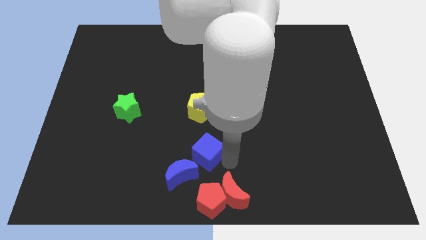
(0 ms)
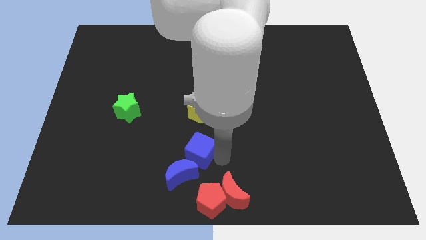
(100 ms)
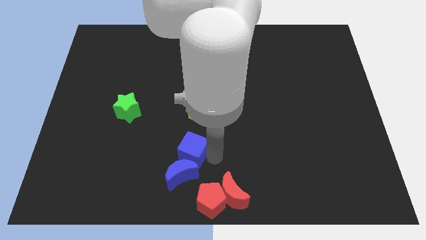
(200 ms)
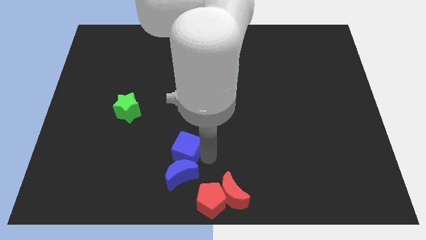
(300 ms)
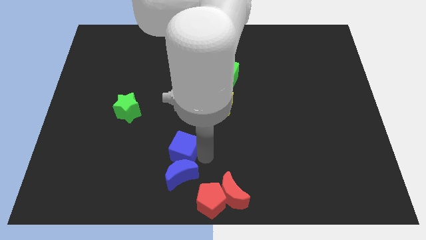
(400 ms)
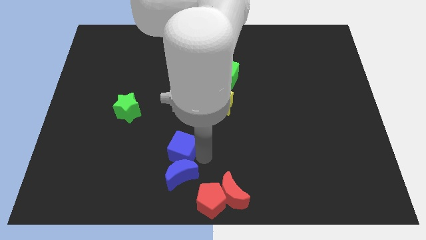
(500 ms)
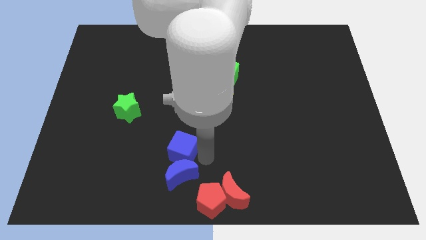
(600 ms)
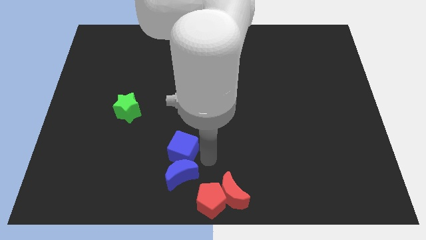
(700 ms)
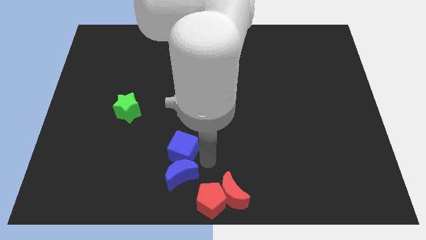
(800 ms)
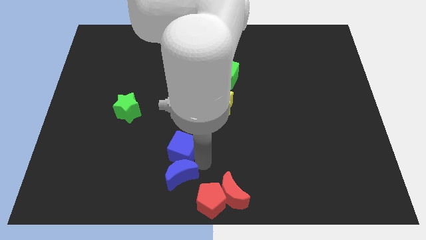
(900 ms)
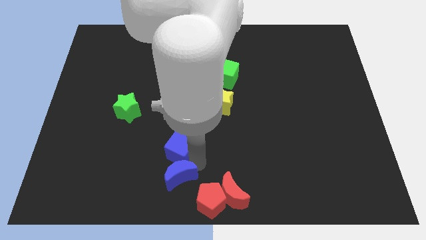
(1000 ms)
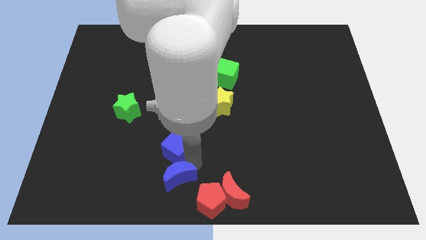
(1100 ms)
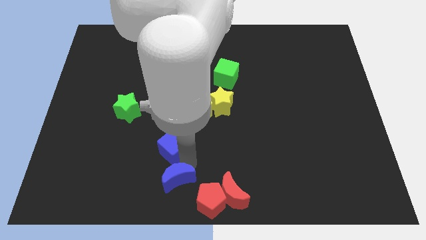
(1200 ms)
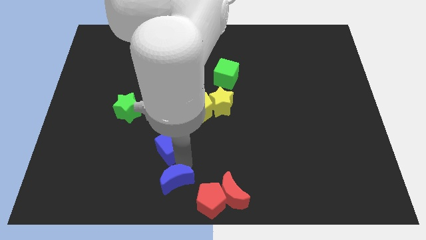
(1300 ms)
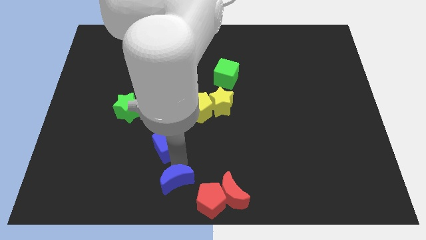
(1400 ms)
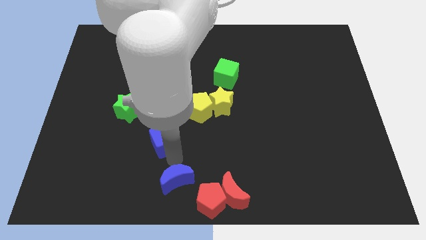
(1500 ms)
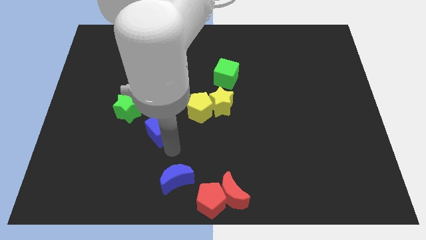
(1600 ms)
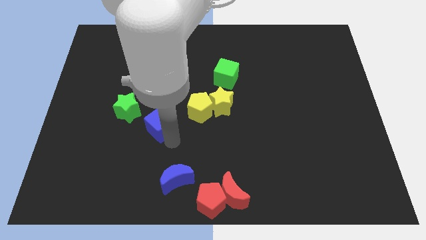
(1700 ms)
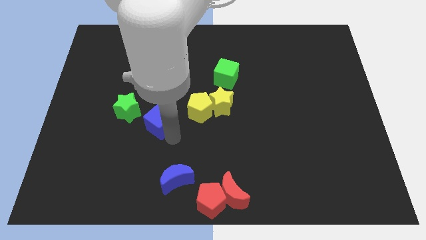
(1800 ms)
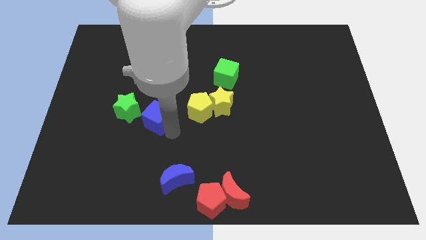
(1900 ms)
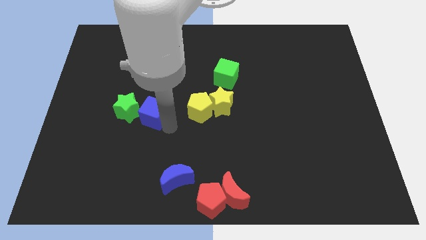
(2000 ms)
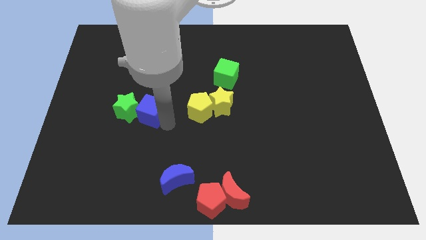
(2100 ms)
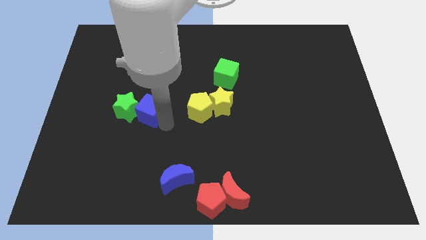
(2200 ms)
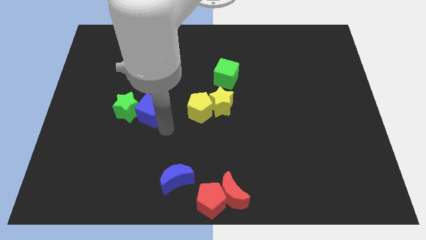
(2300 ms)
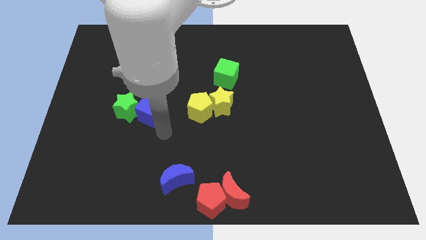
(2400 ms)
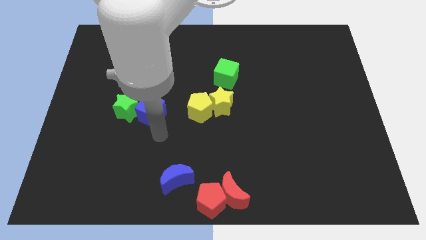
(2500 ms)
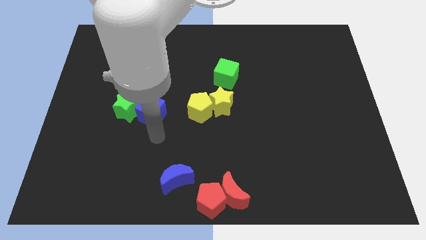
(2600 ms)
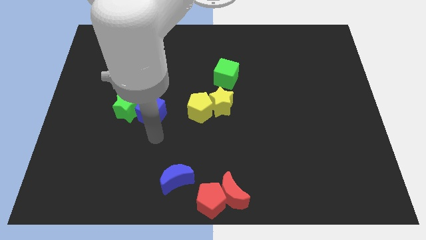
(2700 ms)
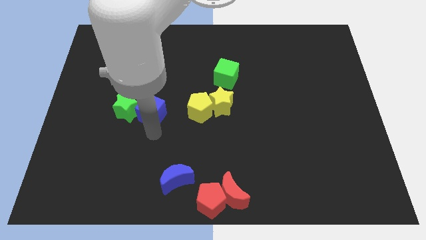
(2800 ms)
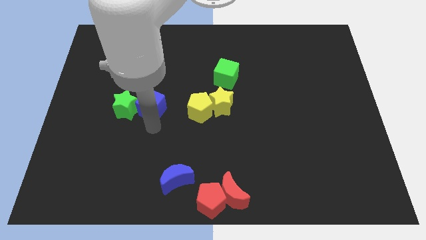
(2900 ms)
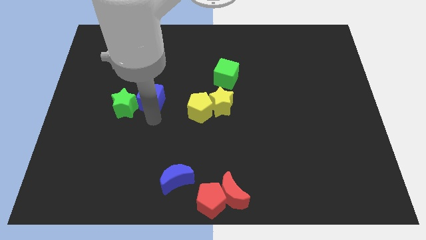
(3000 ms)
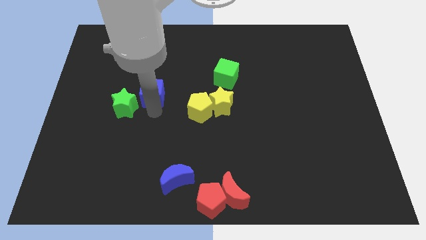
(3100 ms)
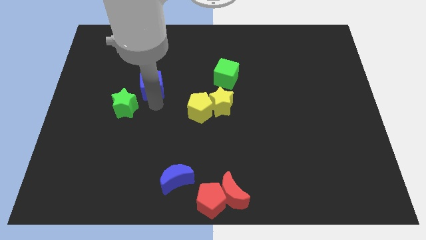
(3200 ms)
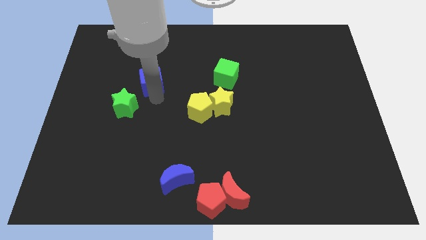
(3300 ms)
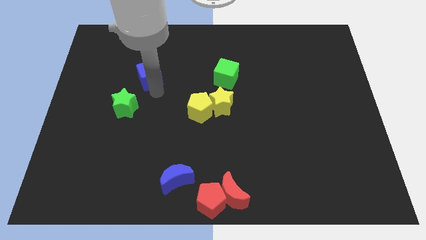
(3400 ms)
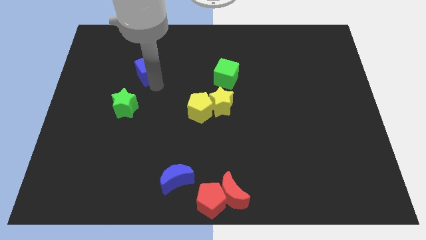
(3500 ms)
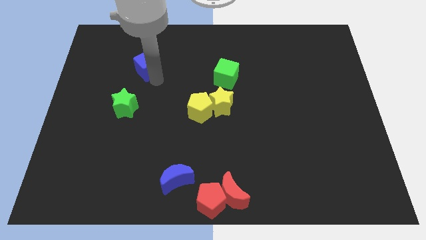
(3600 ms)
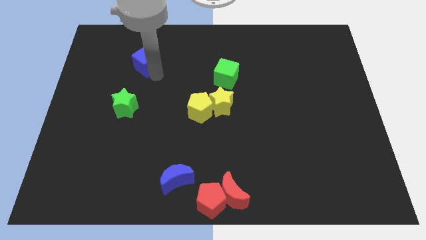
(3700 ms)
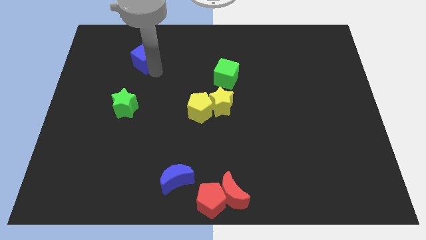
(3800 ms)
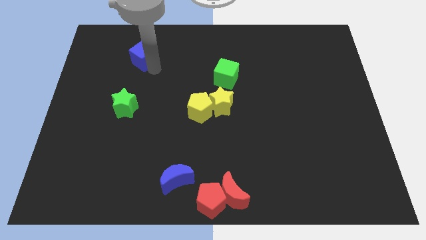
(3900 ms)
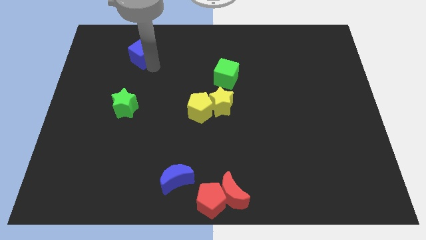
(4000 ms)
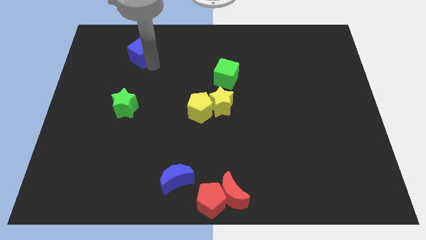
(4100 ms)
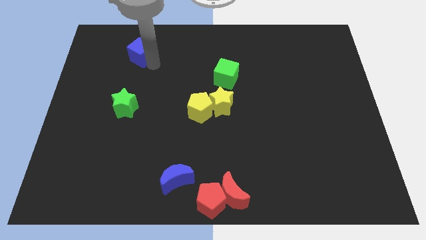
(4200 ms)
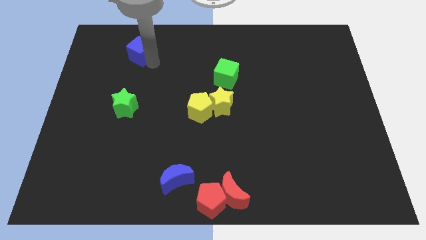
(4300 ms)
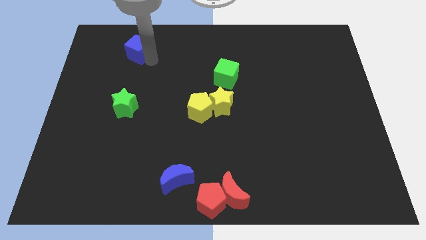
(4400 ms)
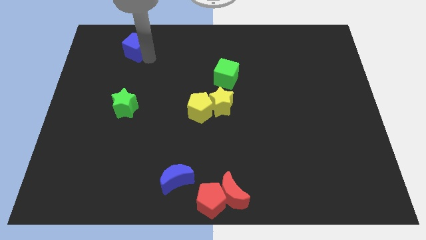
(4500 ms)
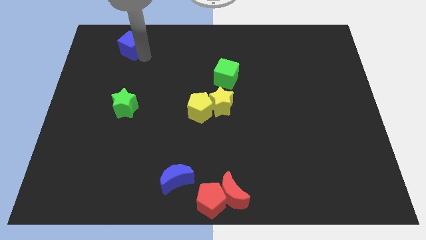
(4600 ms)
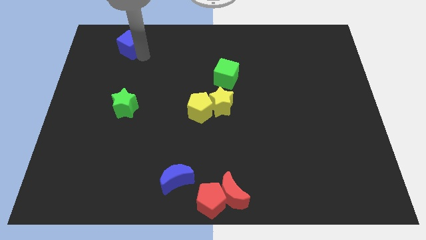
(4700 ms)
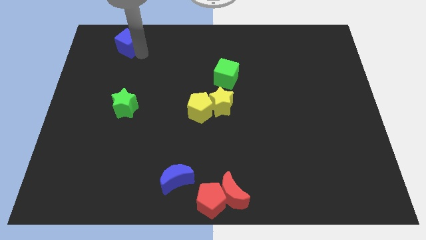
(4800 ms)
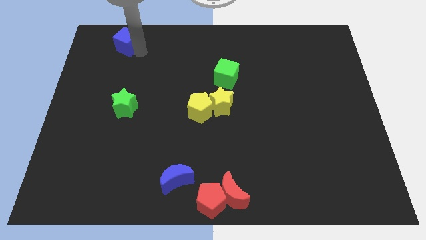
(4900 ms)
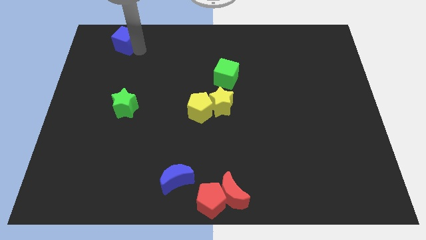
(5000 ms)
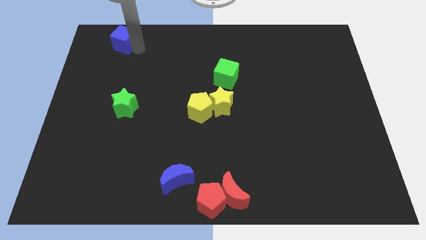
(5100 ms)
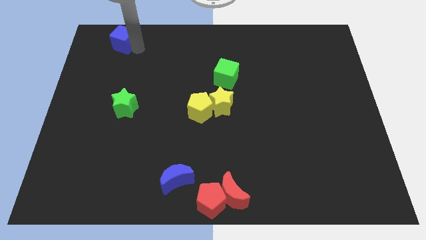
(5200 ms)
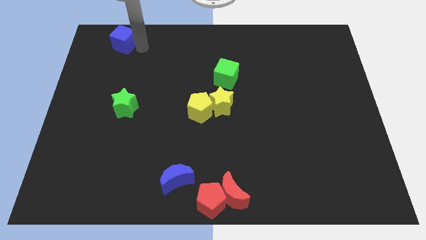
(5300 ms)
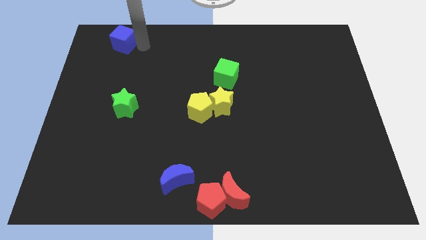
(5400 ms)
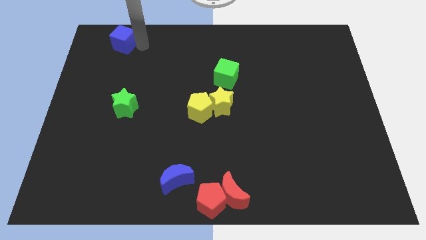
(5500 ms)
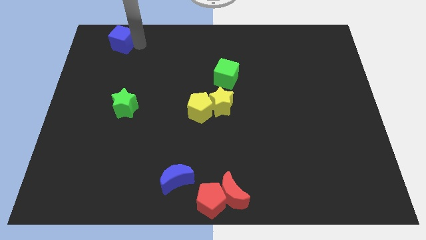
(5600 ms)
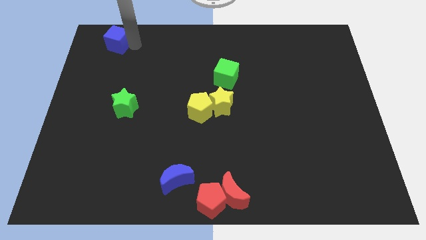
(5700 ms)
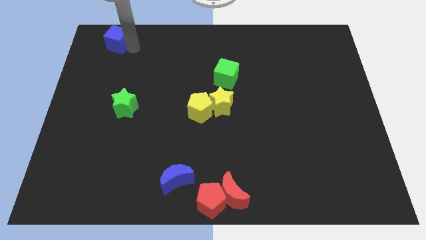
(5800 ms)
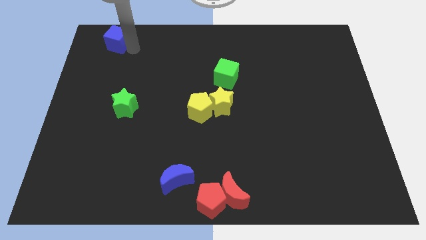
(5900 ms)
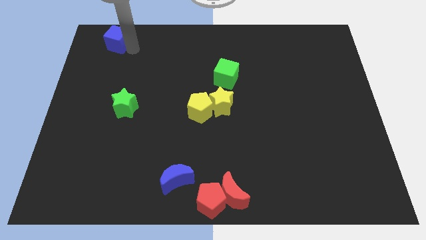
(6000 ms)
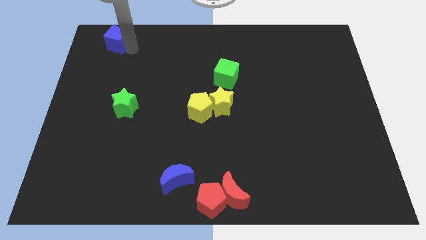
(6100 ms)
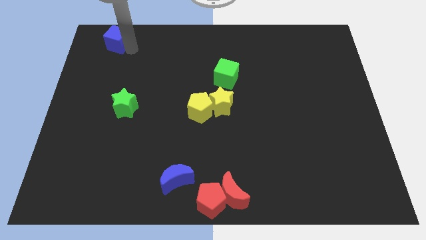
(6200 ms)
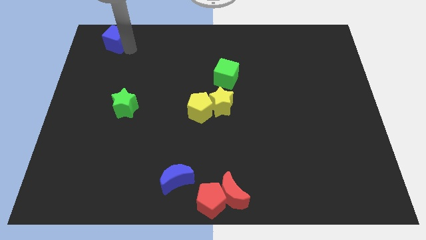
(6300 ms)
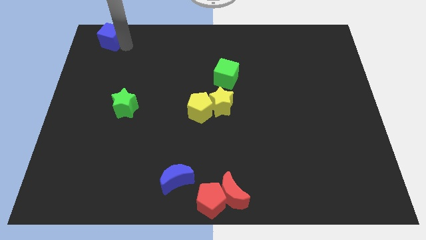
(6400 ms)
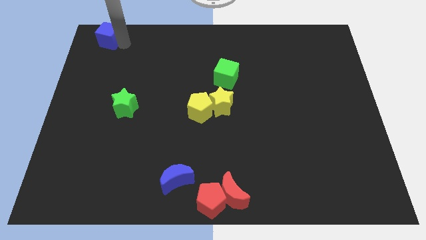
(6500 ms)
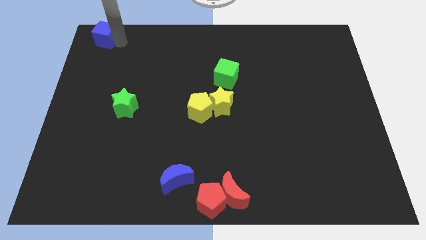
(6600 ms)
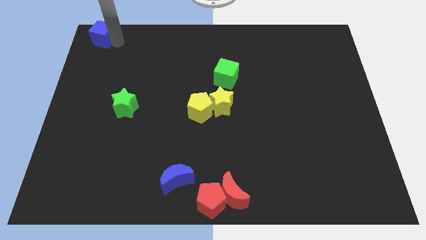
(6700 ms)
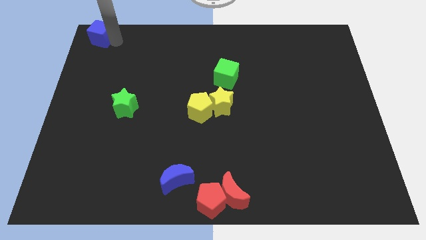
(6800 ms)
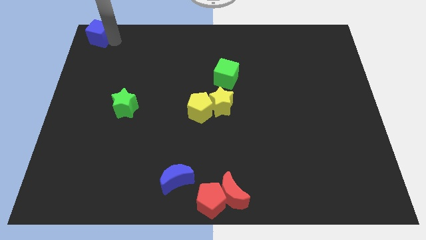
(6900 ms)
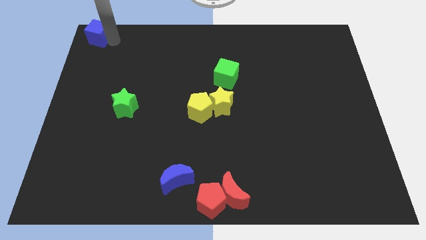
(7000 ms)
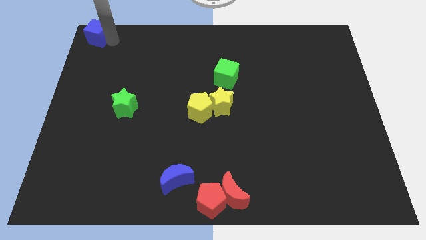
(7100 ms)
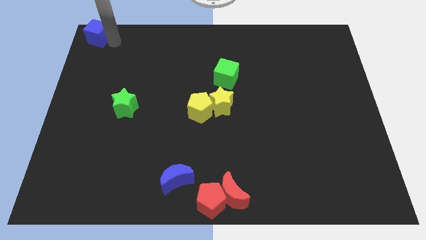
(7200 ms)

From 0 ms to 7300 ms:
move the blue cube to the top left of the board

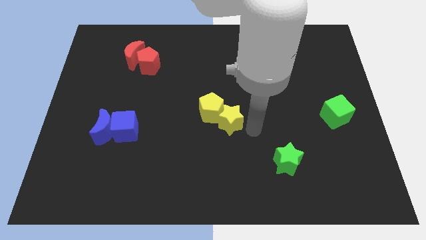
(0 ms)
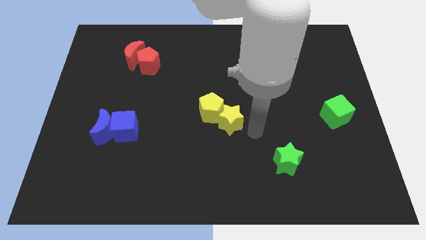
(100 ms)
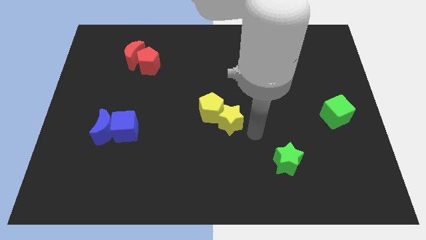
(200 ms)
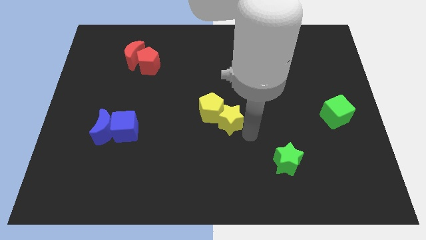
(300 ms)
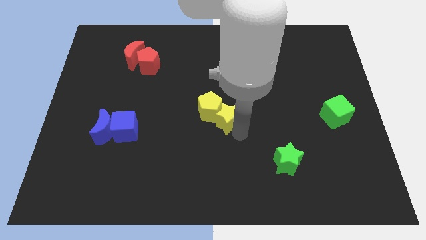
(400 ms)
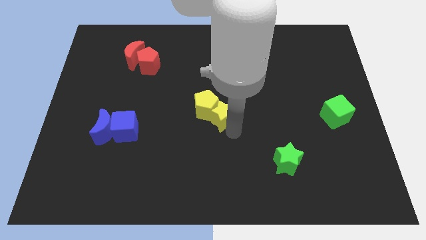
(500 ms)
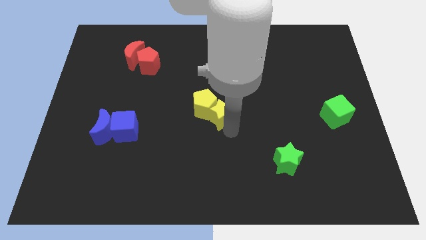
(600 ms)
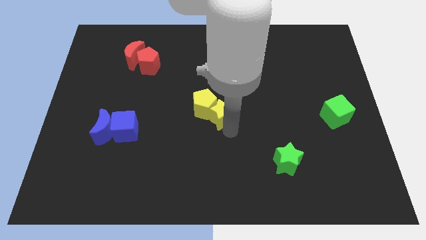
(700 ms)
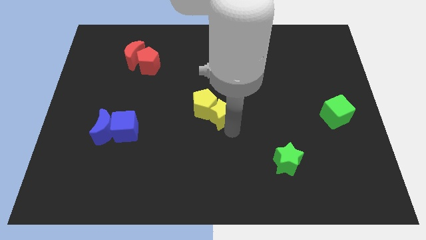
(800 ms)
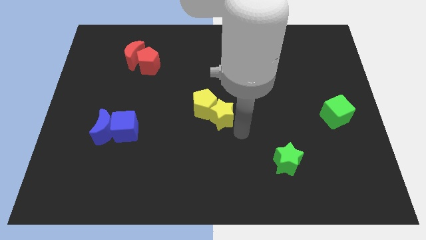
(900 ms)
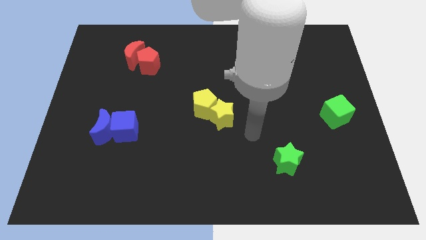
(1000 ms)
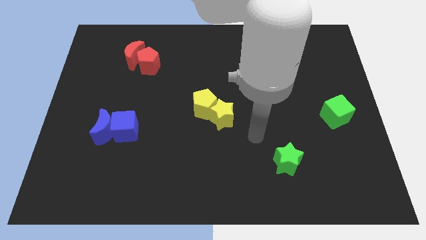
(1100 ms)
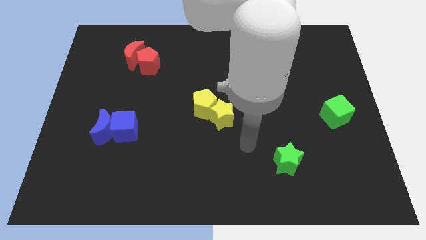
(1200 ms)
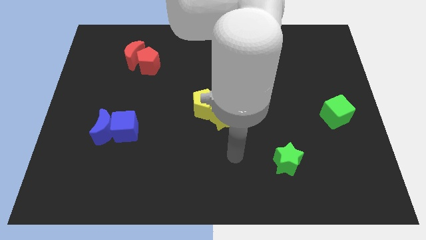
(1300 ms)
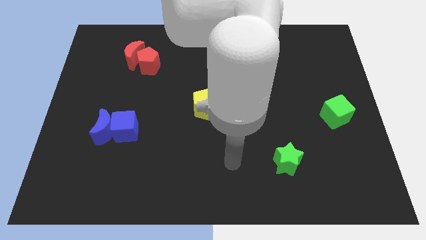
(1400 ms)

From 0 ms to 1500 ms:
push the yellow star and yellow pentagon towards the center of the board

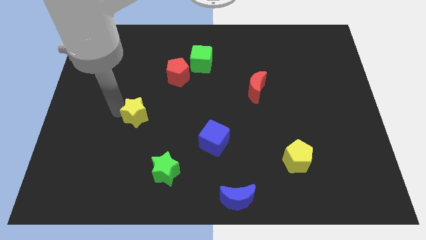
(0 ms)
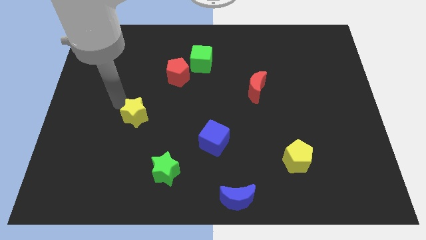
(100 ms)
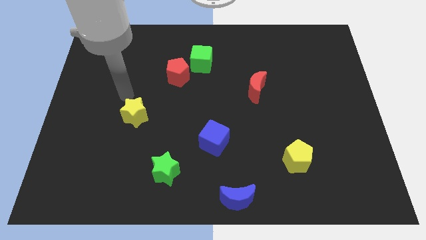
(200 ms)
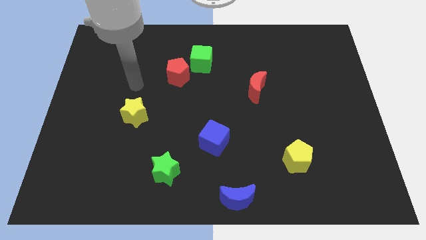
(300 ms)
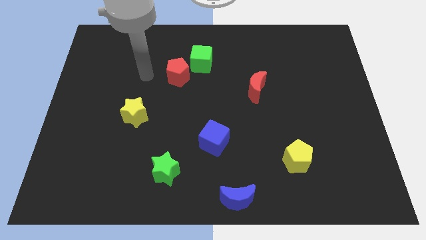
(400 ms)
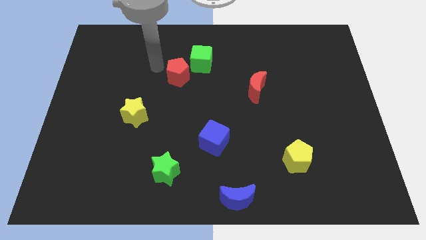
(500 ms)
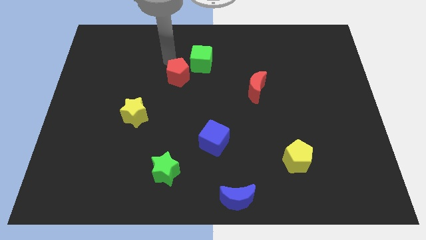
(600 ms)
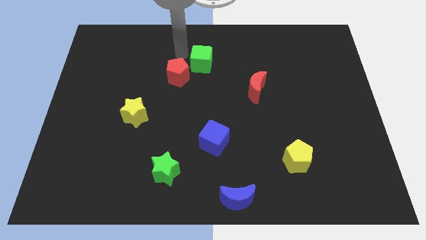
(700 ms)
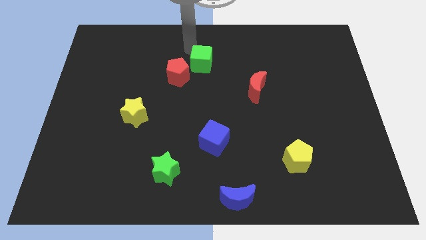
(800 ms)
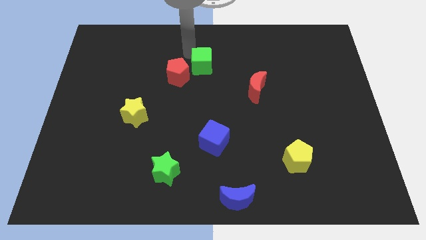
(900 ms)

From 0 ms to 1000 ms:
place yourself above green cube
